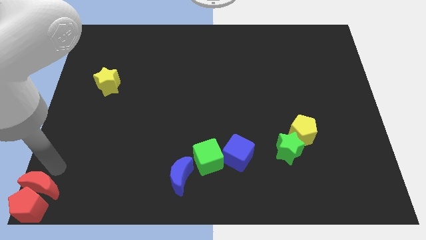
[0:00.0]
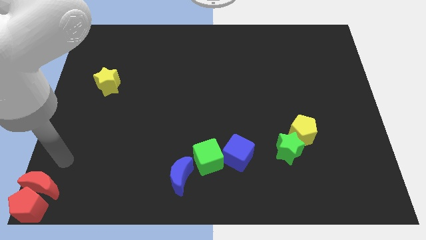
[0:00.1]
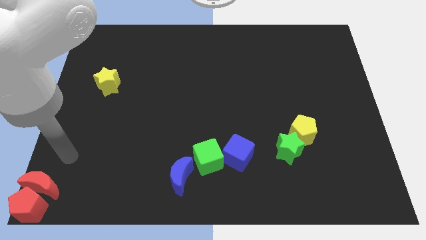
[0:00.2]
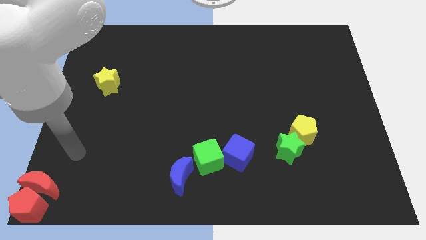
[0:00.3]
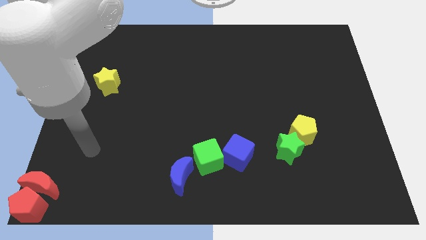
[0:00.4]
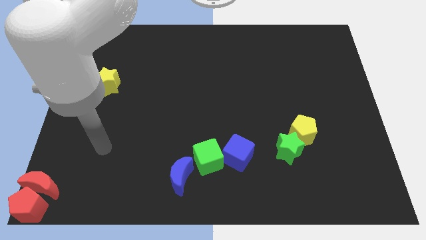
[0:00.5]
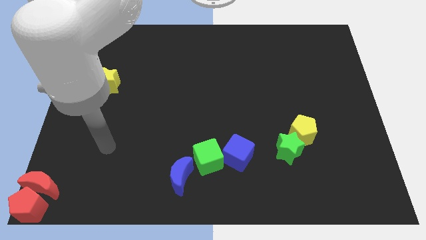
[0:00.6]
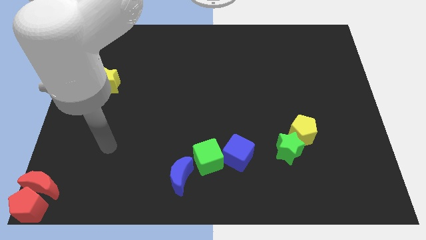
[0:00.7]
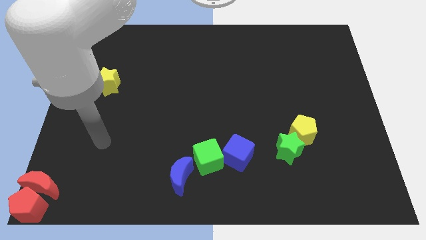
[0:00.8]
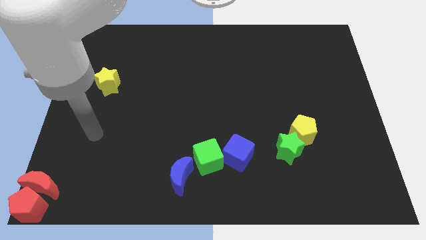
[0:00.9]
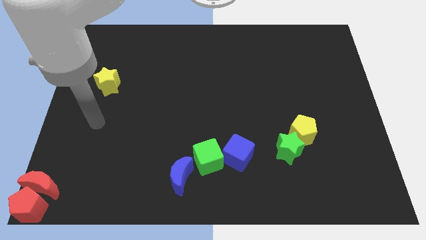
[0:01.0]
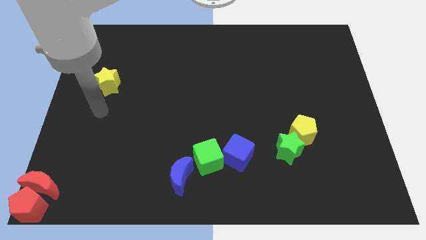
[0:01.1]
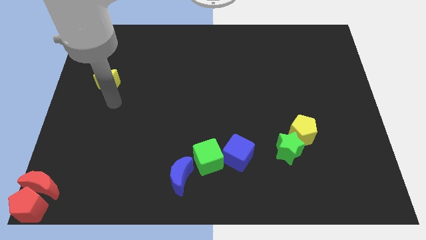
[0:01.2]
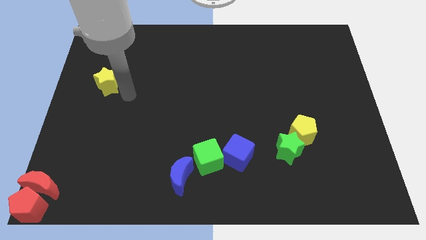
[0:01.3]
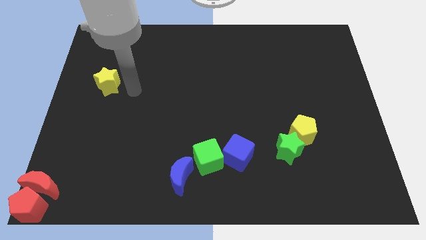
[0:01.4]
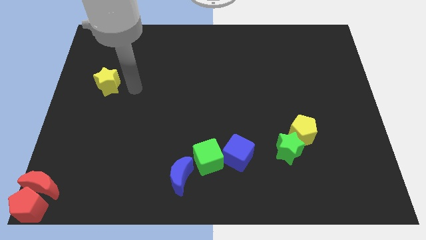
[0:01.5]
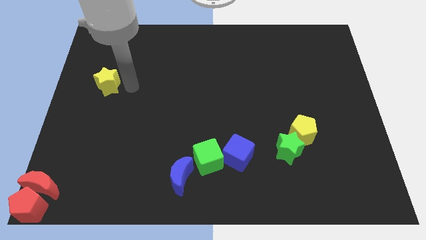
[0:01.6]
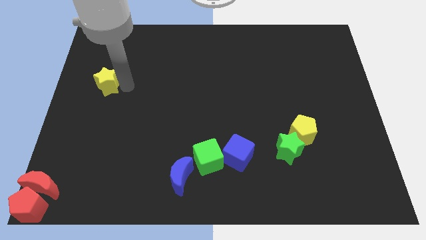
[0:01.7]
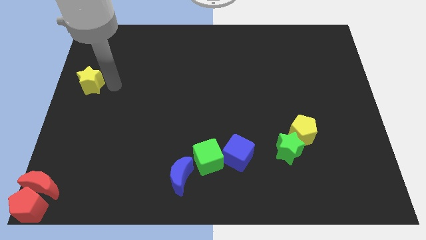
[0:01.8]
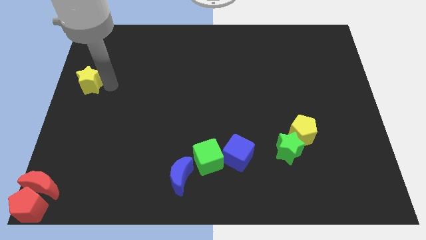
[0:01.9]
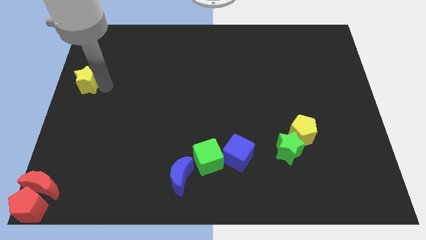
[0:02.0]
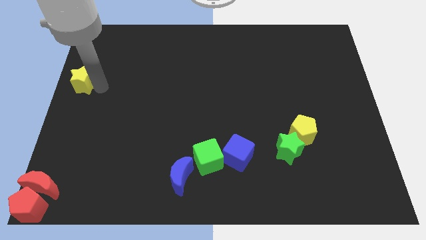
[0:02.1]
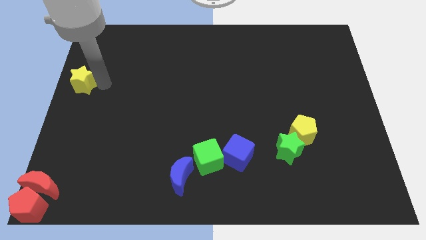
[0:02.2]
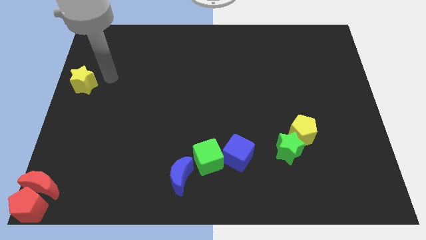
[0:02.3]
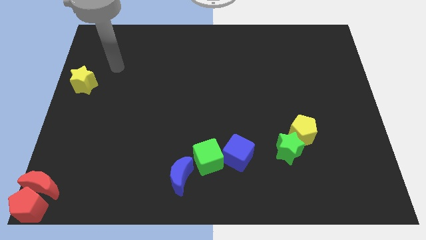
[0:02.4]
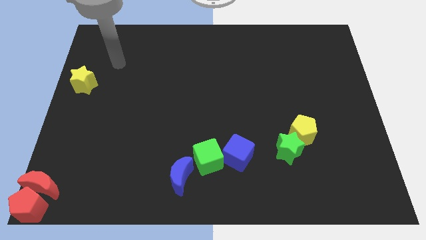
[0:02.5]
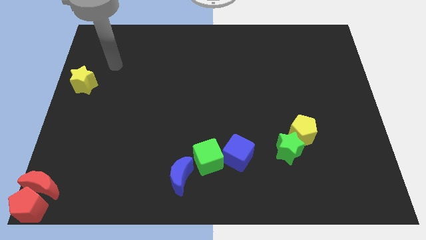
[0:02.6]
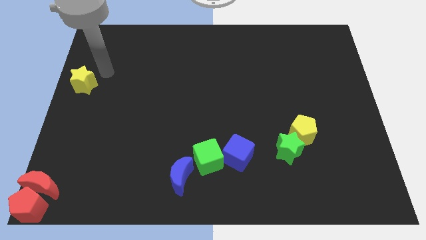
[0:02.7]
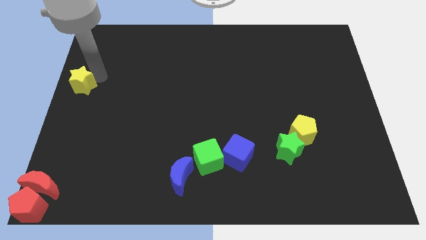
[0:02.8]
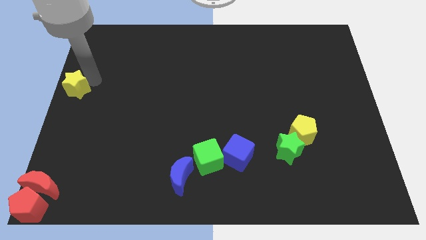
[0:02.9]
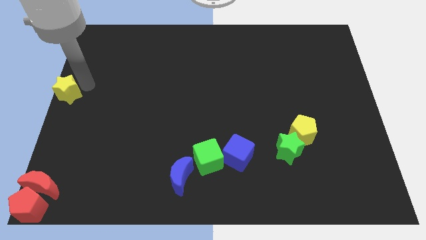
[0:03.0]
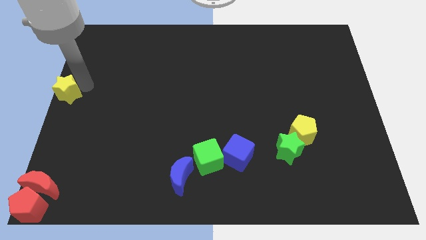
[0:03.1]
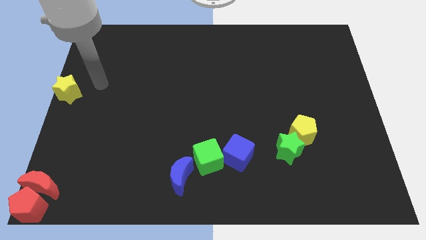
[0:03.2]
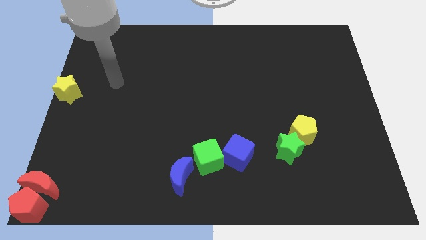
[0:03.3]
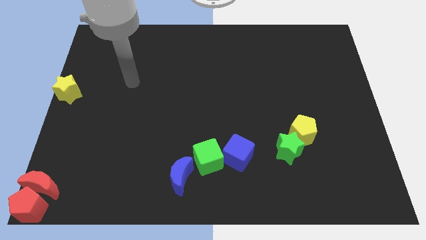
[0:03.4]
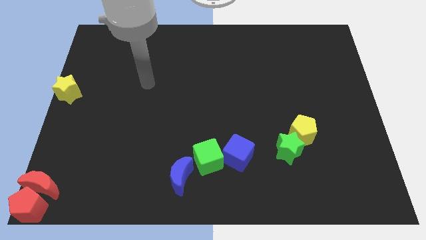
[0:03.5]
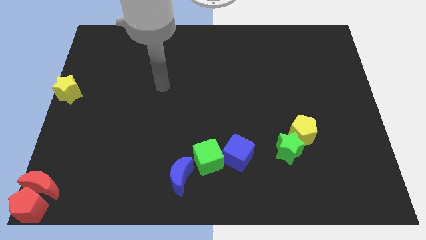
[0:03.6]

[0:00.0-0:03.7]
slightly move the yellow star to center left of the board

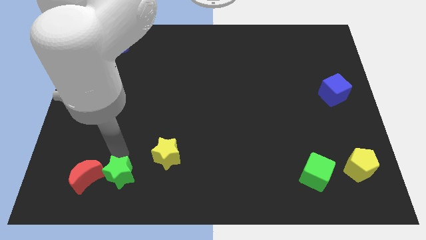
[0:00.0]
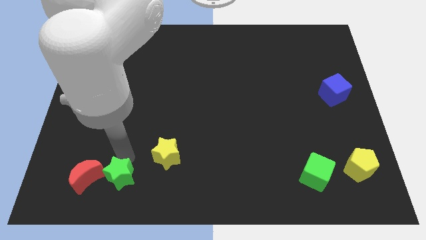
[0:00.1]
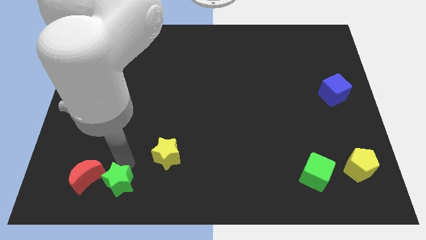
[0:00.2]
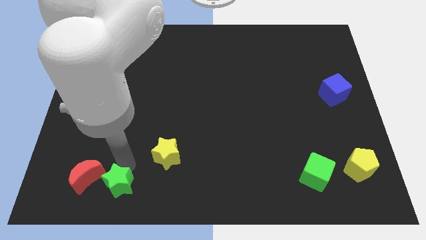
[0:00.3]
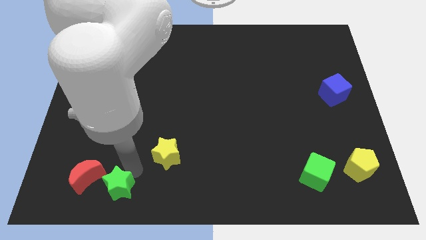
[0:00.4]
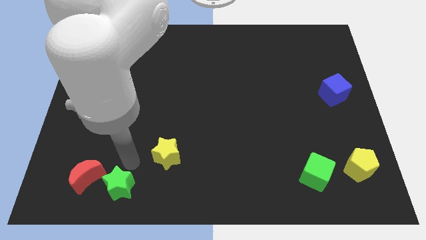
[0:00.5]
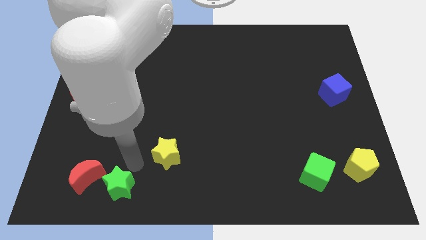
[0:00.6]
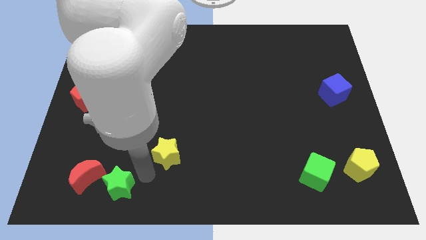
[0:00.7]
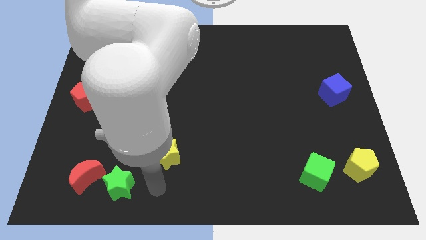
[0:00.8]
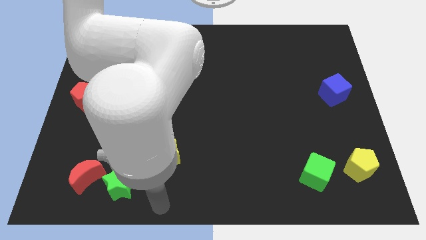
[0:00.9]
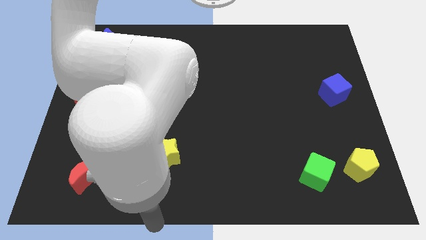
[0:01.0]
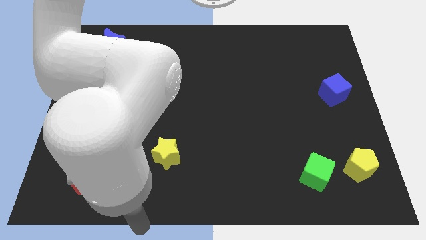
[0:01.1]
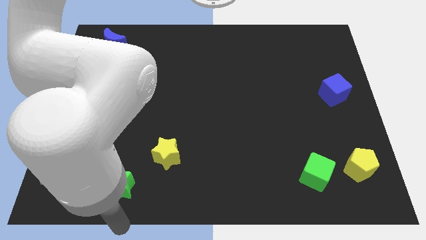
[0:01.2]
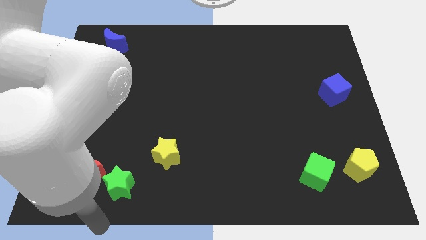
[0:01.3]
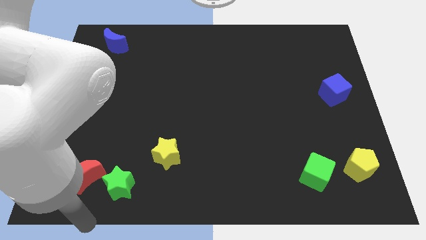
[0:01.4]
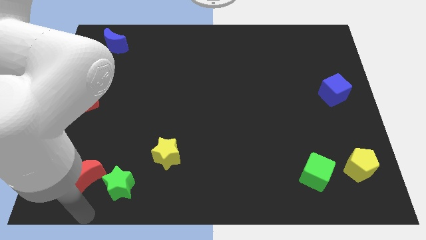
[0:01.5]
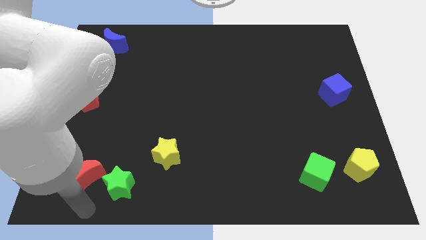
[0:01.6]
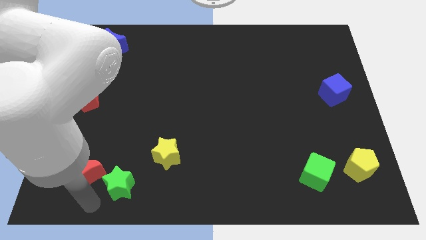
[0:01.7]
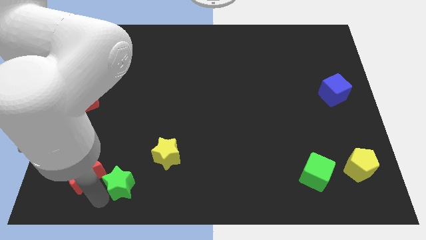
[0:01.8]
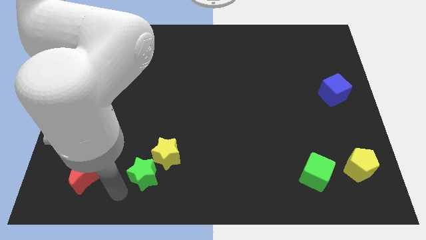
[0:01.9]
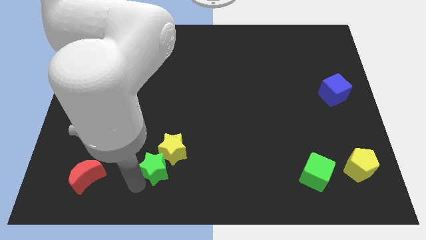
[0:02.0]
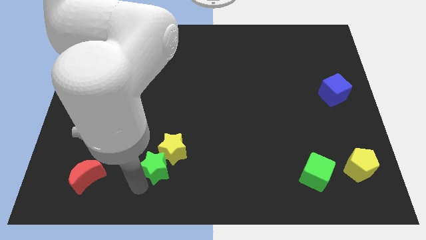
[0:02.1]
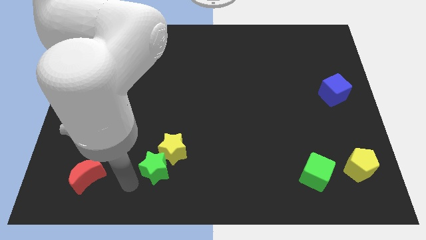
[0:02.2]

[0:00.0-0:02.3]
place the green star left to the yellow star

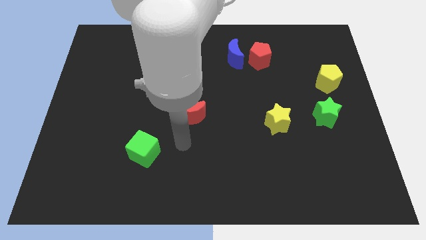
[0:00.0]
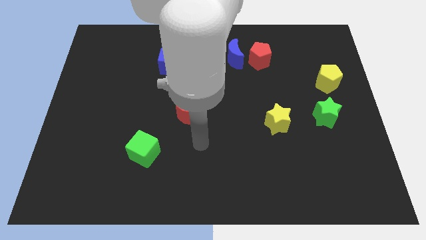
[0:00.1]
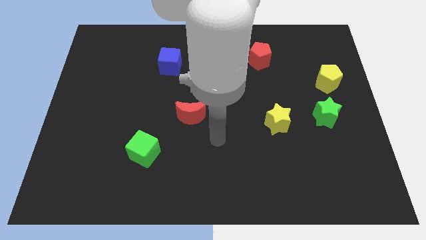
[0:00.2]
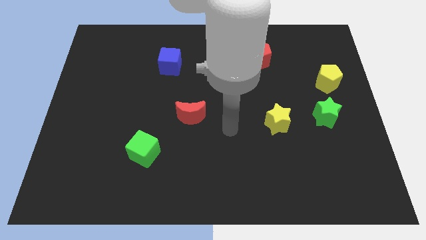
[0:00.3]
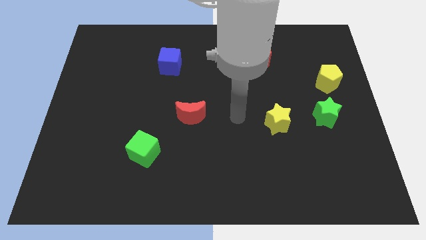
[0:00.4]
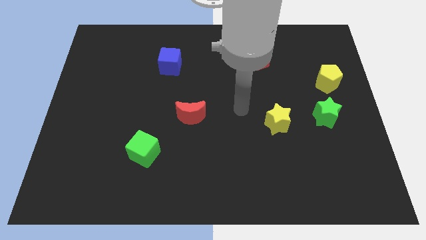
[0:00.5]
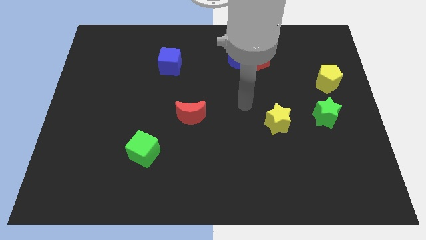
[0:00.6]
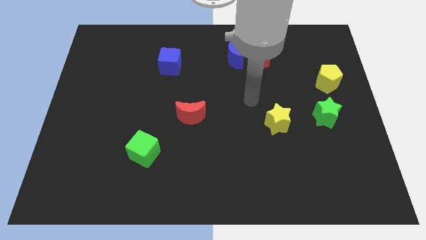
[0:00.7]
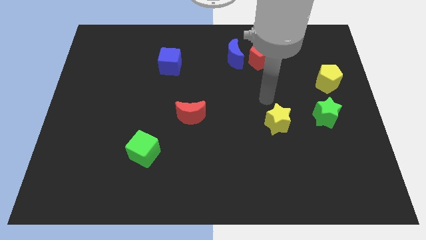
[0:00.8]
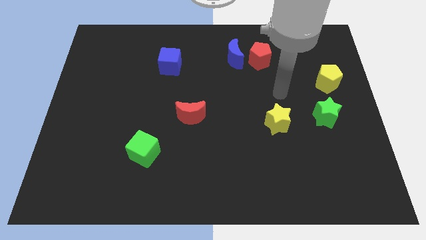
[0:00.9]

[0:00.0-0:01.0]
put your arm in between the yellow pentagon and red crescent

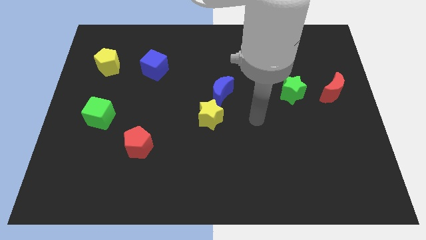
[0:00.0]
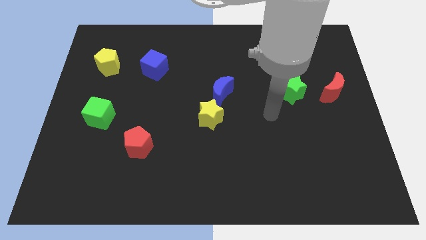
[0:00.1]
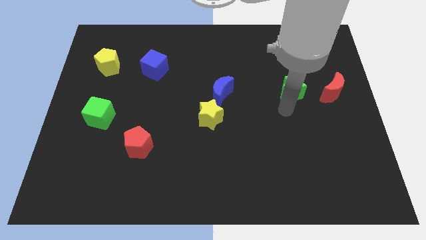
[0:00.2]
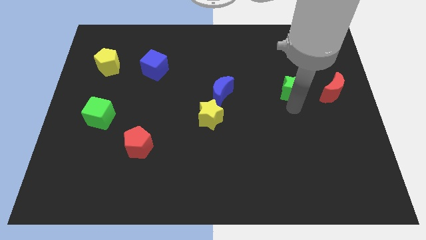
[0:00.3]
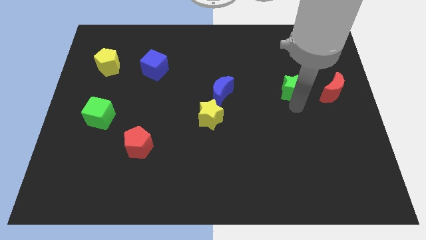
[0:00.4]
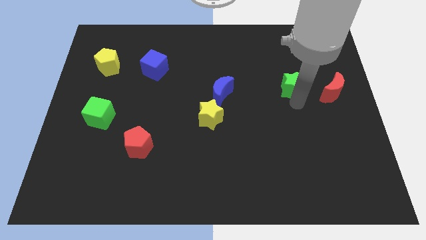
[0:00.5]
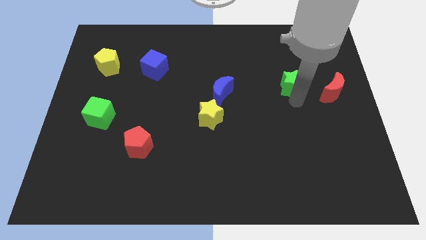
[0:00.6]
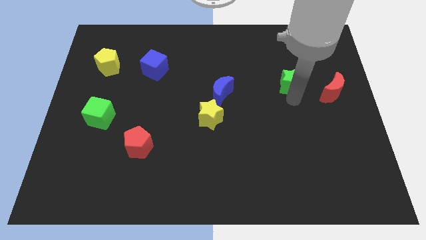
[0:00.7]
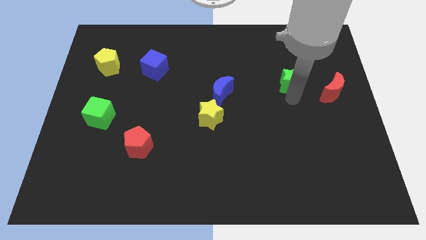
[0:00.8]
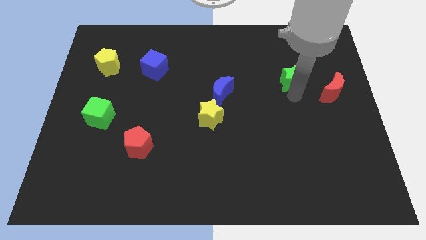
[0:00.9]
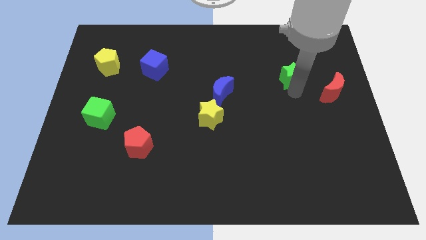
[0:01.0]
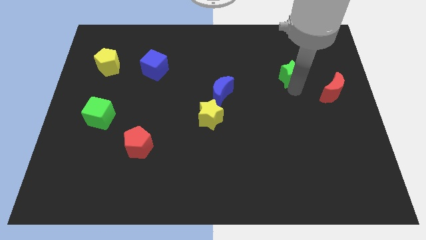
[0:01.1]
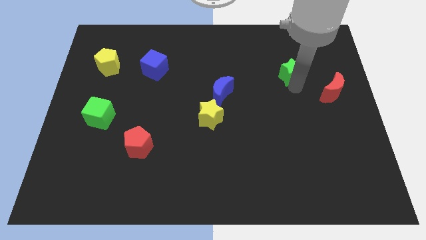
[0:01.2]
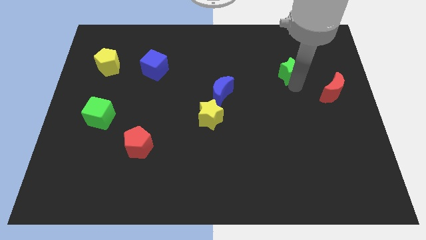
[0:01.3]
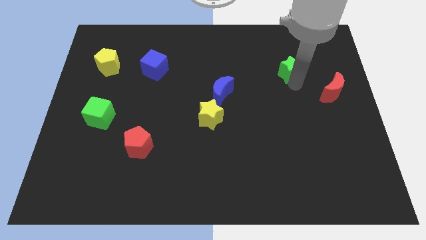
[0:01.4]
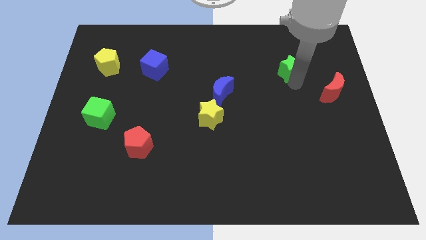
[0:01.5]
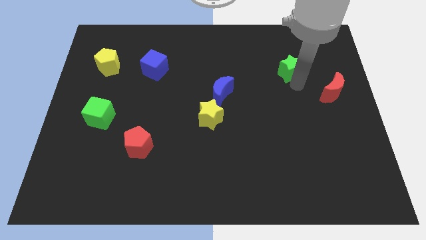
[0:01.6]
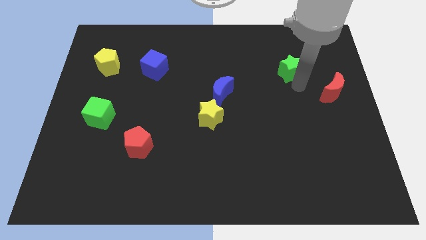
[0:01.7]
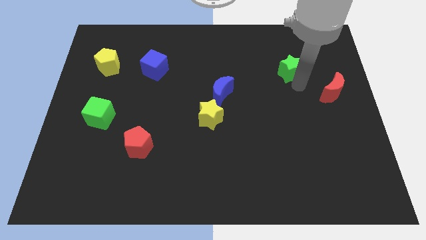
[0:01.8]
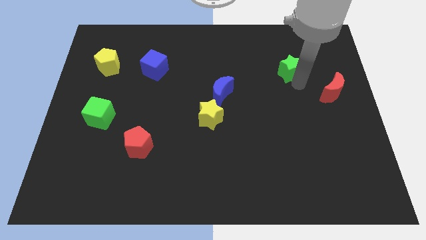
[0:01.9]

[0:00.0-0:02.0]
move the green star to the top of the board
